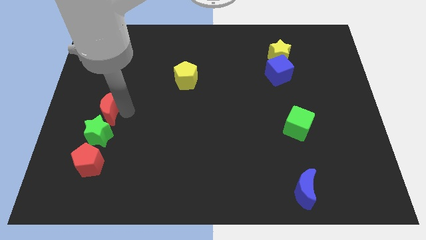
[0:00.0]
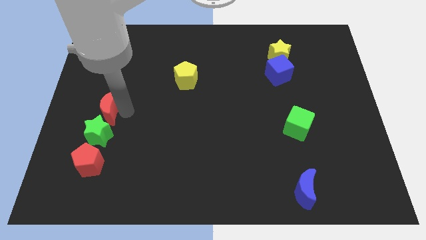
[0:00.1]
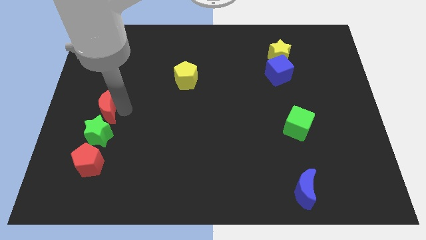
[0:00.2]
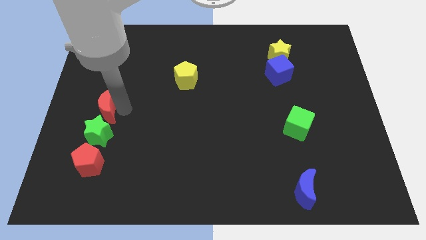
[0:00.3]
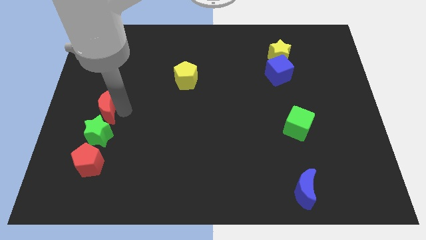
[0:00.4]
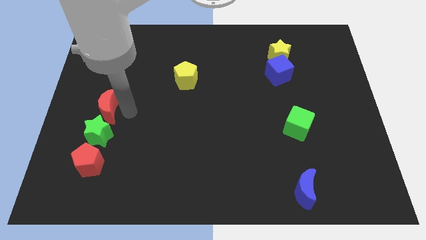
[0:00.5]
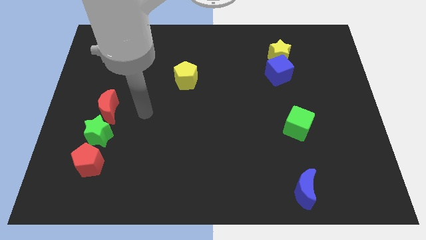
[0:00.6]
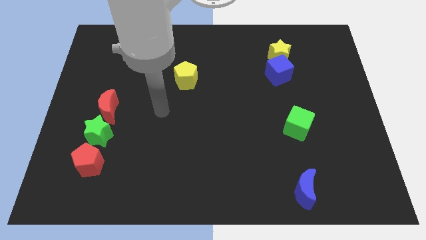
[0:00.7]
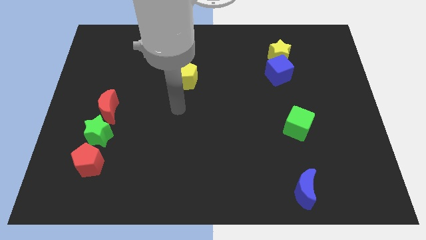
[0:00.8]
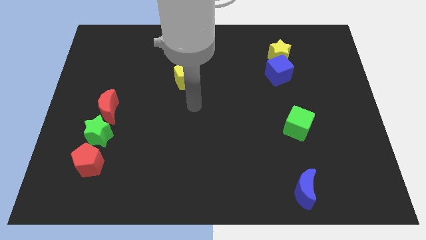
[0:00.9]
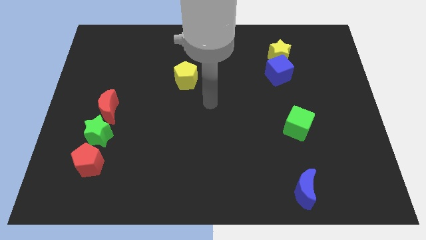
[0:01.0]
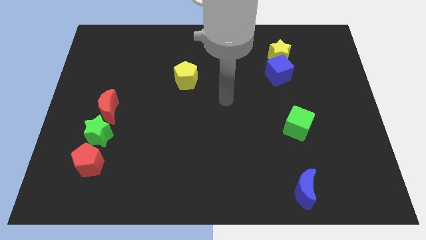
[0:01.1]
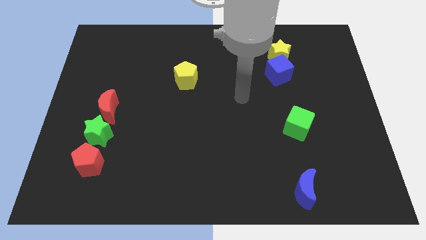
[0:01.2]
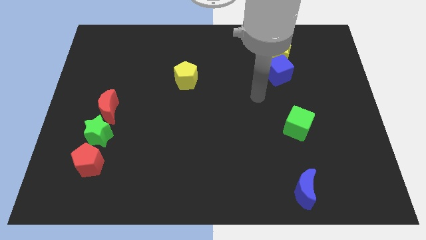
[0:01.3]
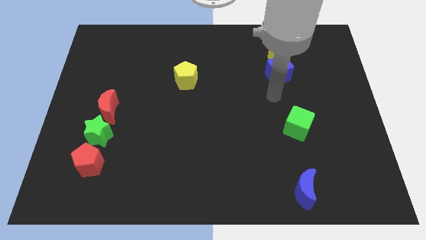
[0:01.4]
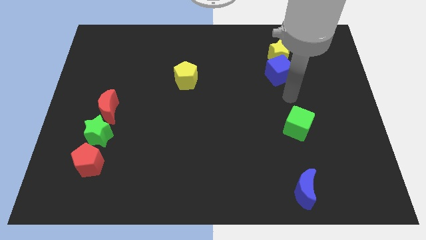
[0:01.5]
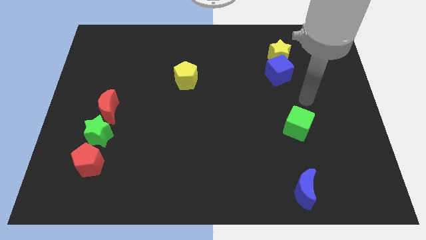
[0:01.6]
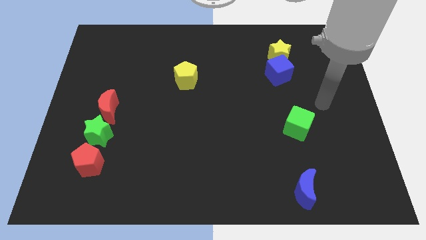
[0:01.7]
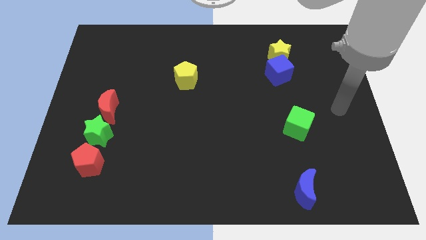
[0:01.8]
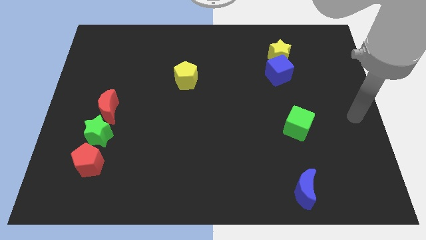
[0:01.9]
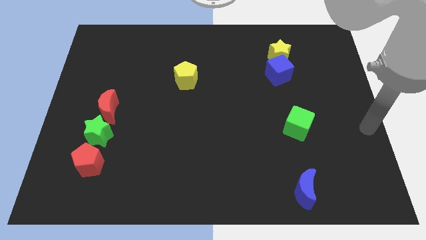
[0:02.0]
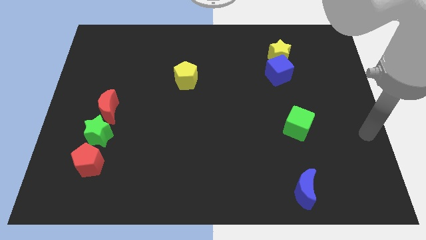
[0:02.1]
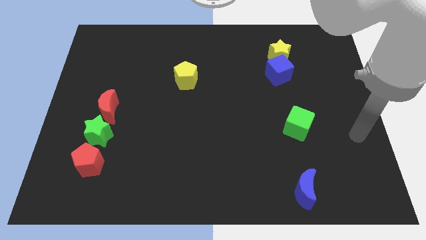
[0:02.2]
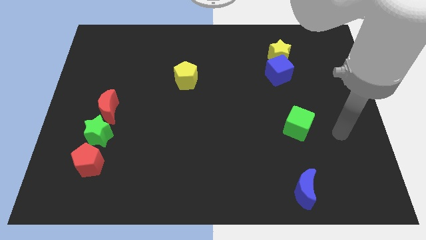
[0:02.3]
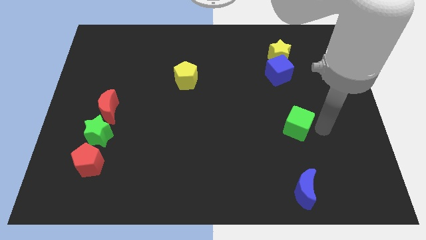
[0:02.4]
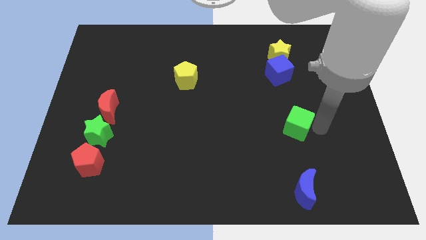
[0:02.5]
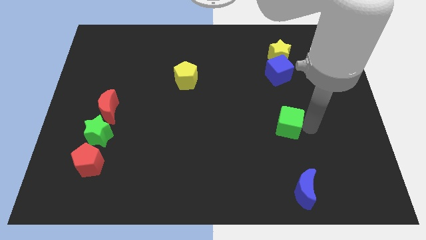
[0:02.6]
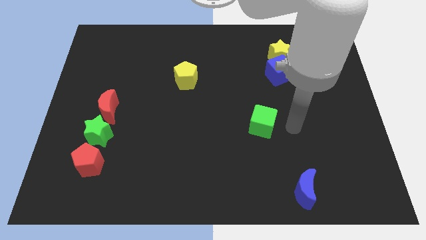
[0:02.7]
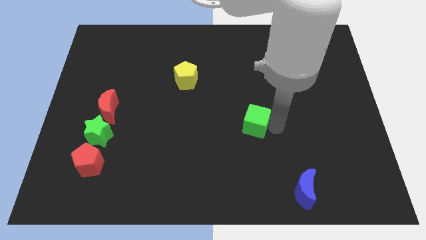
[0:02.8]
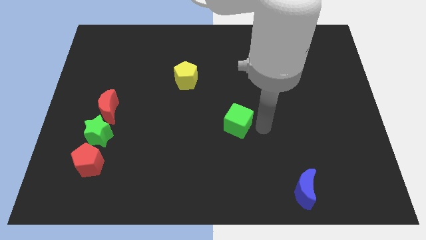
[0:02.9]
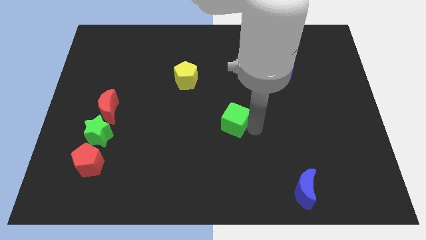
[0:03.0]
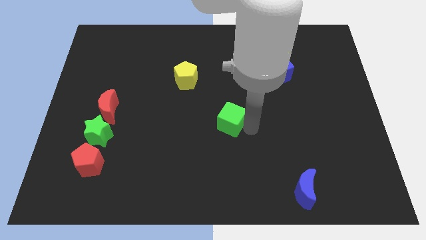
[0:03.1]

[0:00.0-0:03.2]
slide the green cube diagonal to the yellow pentagon

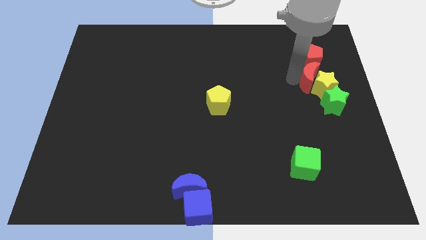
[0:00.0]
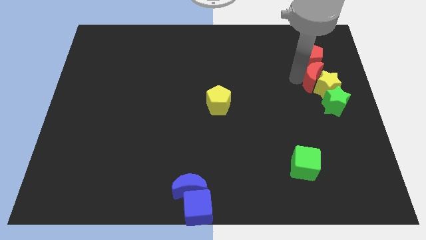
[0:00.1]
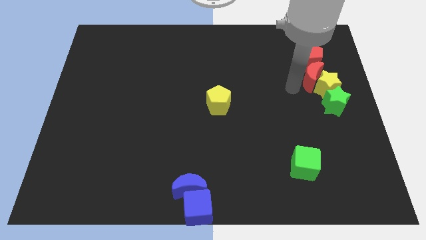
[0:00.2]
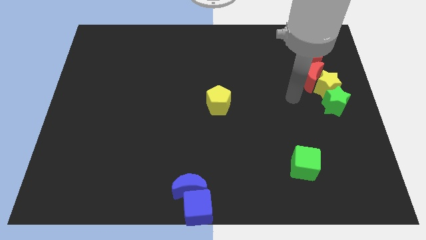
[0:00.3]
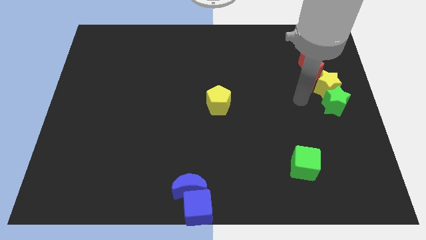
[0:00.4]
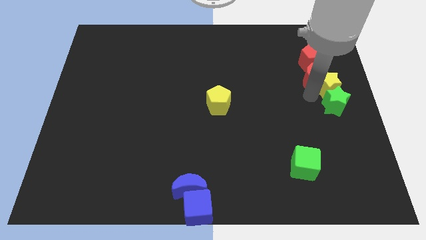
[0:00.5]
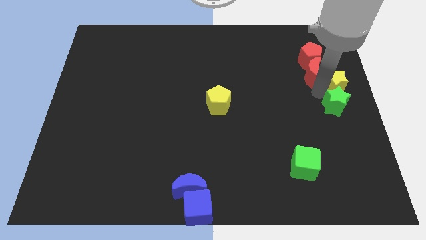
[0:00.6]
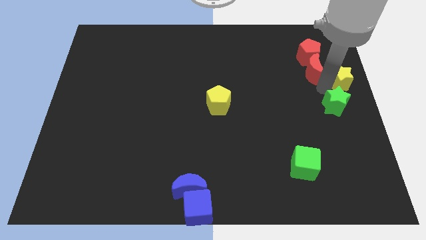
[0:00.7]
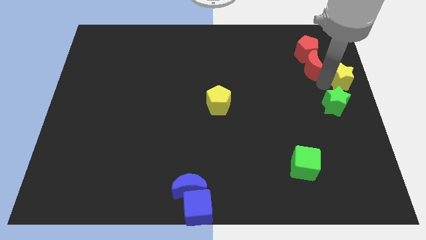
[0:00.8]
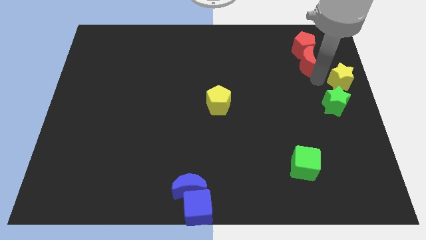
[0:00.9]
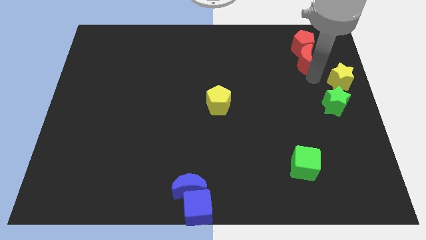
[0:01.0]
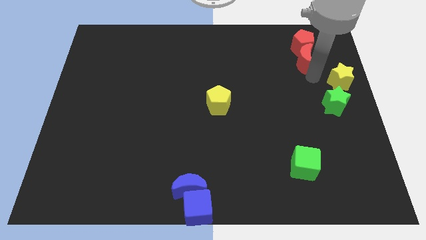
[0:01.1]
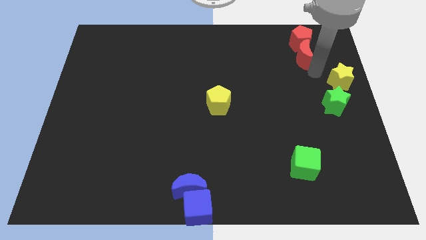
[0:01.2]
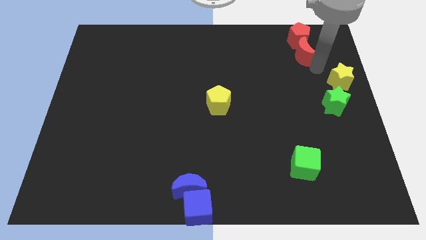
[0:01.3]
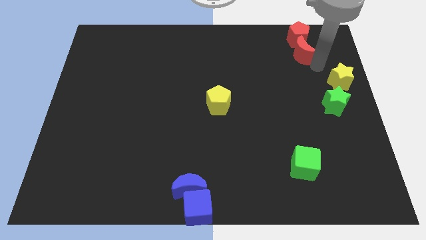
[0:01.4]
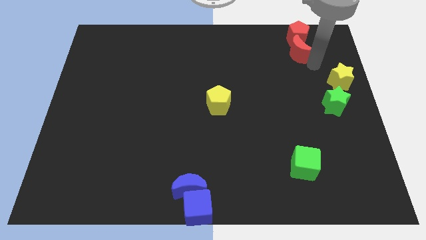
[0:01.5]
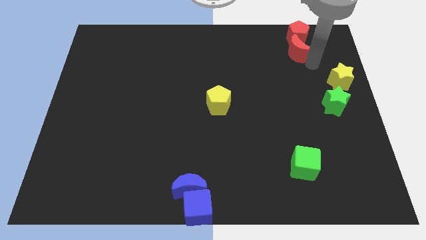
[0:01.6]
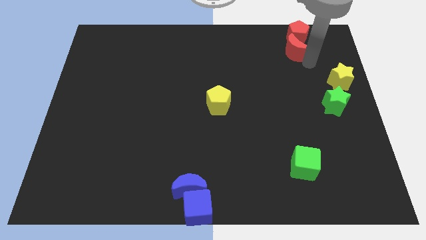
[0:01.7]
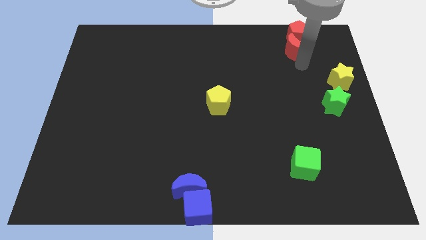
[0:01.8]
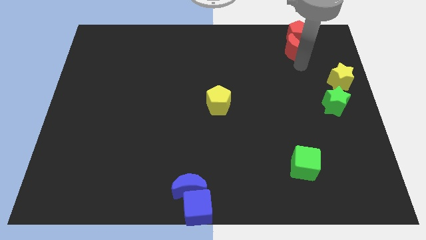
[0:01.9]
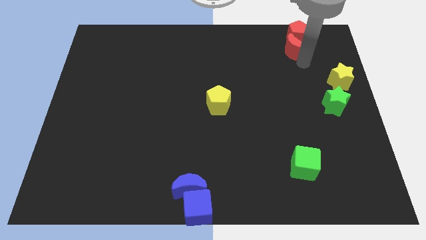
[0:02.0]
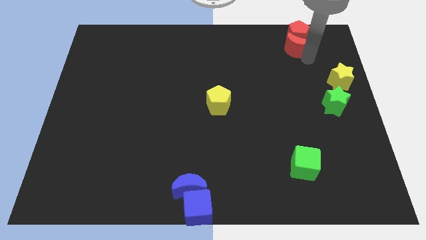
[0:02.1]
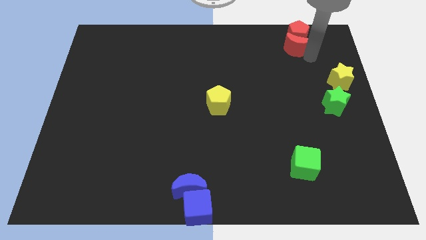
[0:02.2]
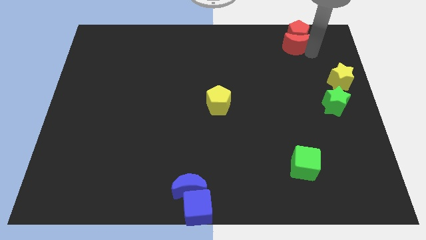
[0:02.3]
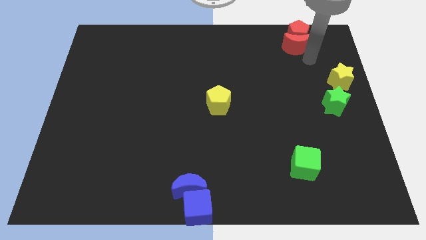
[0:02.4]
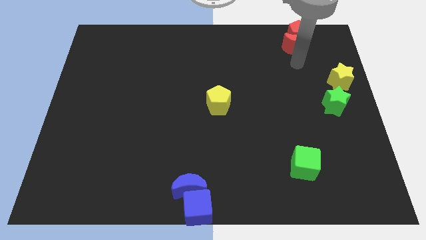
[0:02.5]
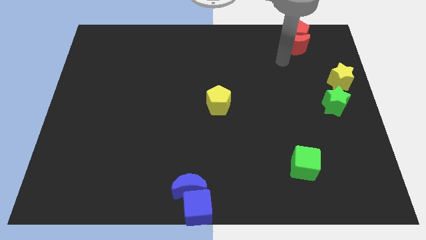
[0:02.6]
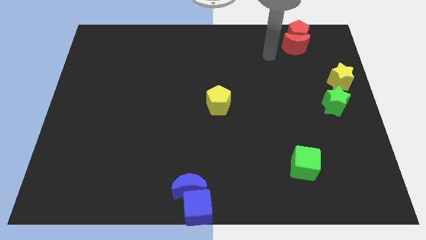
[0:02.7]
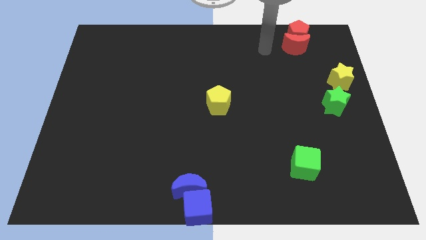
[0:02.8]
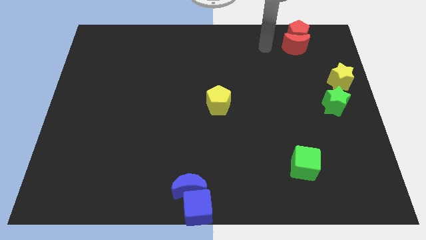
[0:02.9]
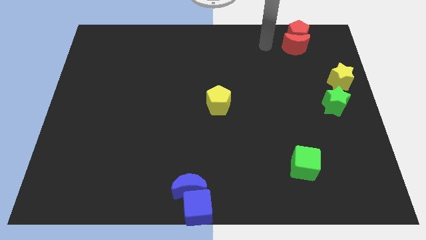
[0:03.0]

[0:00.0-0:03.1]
separate both the red blocks from the yellow star

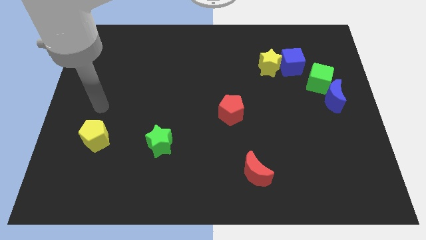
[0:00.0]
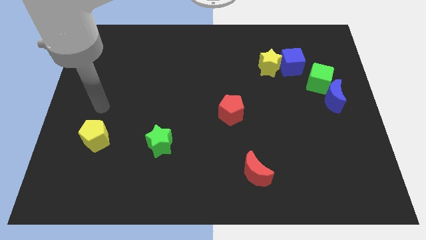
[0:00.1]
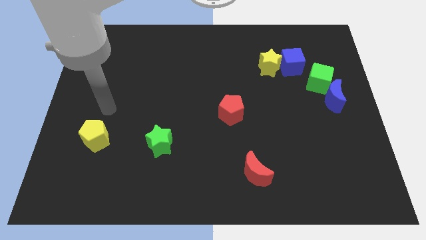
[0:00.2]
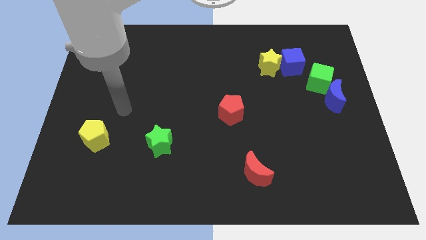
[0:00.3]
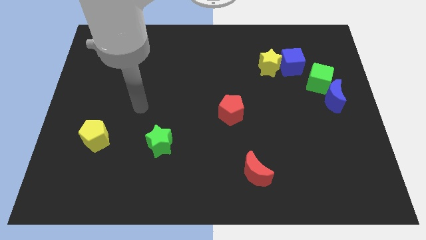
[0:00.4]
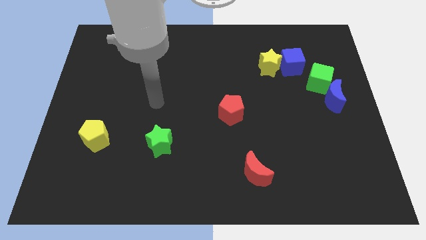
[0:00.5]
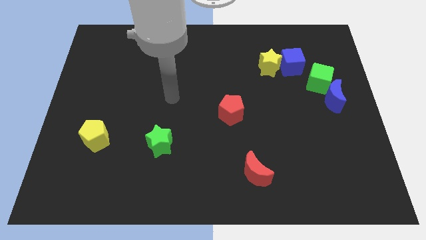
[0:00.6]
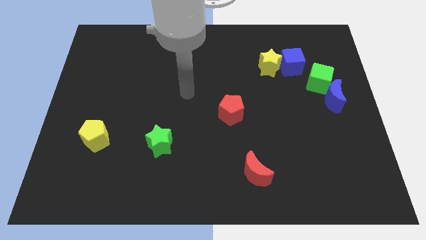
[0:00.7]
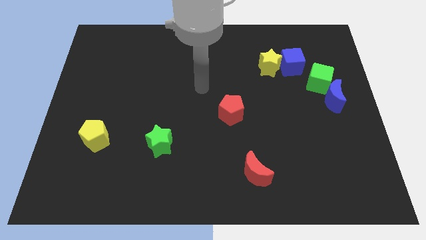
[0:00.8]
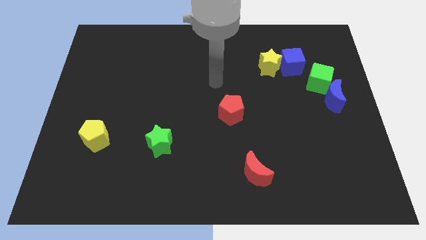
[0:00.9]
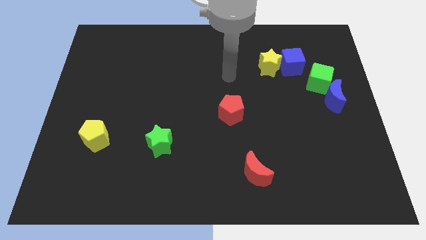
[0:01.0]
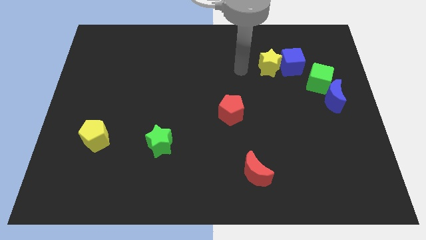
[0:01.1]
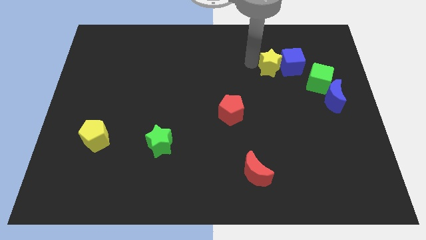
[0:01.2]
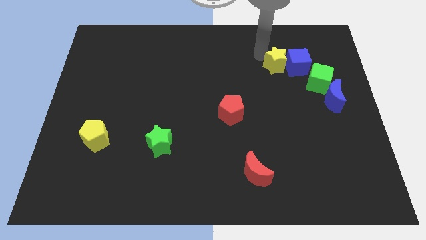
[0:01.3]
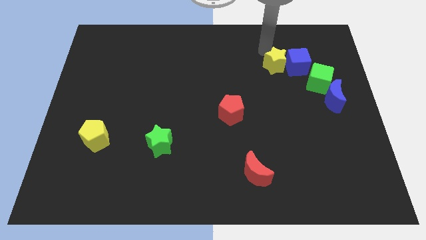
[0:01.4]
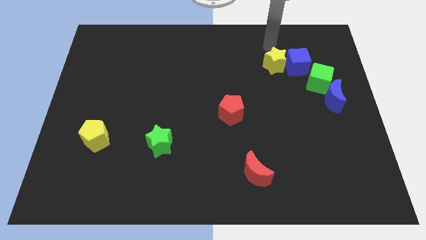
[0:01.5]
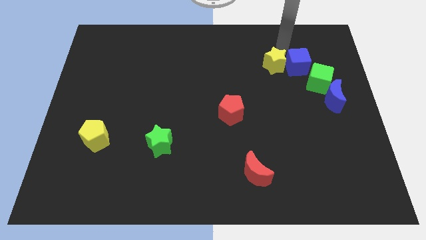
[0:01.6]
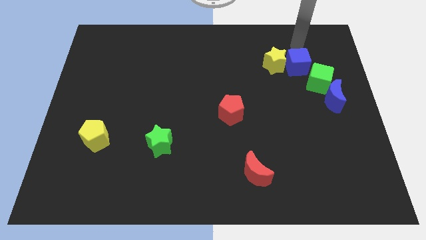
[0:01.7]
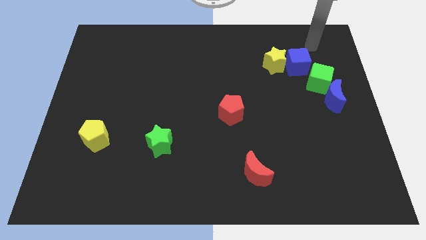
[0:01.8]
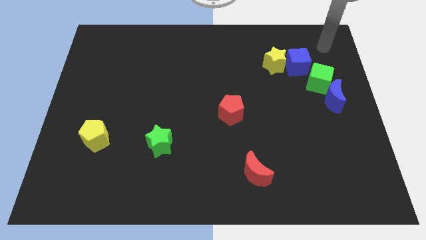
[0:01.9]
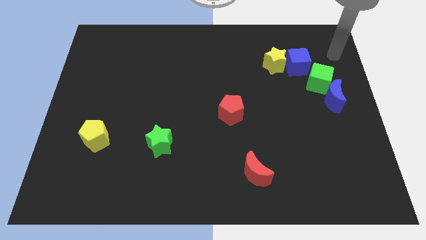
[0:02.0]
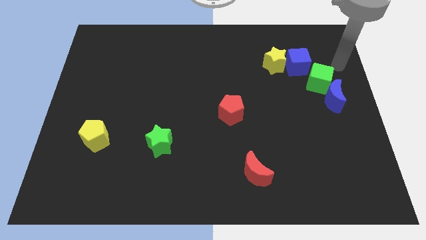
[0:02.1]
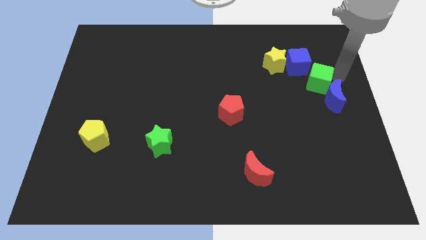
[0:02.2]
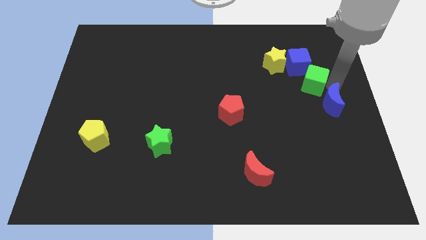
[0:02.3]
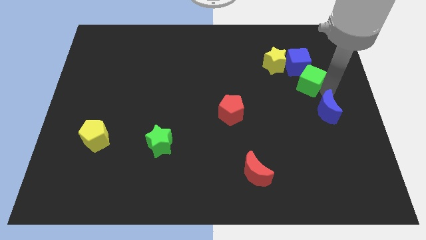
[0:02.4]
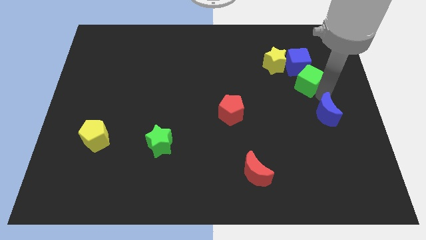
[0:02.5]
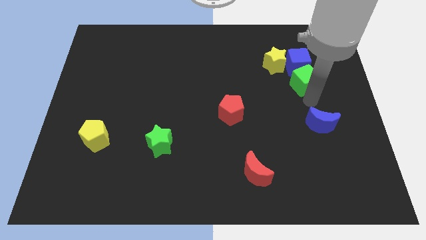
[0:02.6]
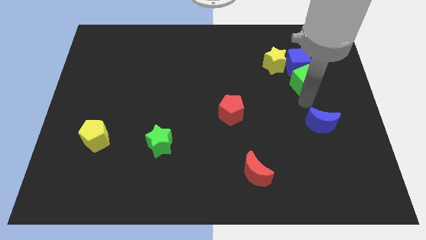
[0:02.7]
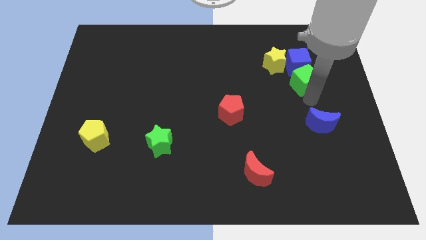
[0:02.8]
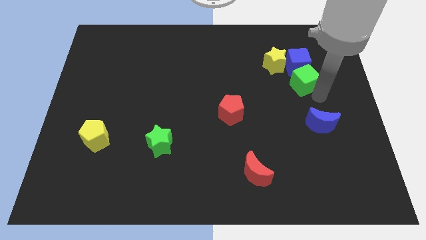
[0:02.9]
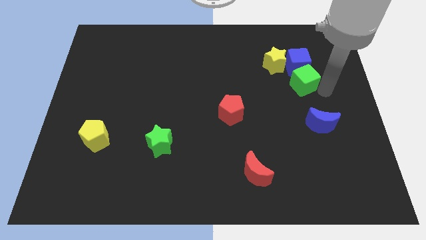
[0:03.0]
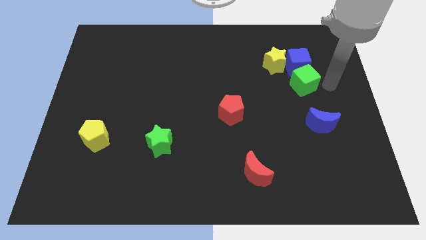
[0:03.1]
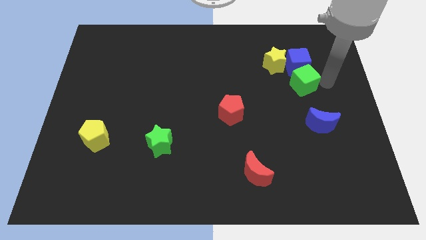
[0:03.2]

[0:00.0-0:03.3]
separate the blue crescent from the green cube
